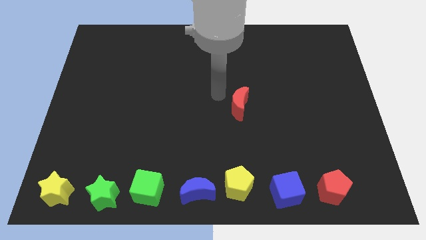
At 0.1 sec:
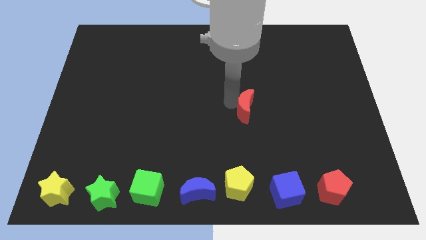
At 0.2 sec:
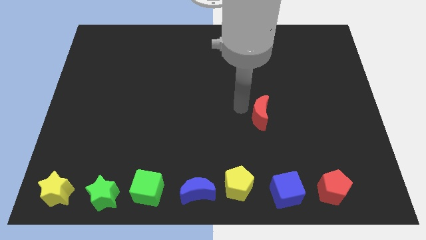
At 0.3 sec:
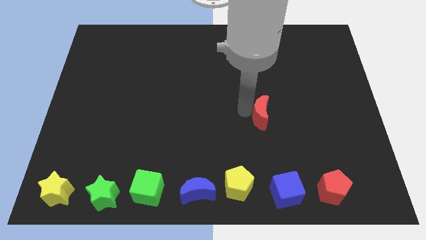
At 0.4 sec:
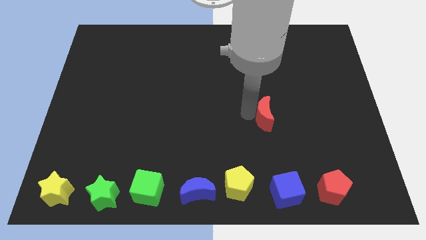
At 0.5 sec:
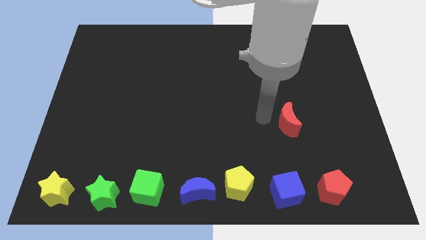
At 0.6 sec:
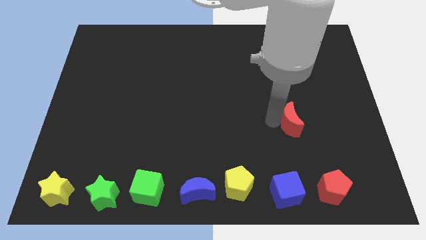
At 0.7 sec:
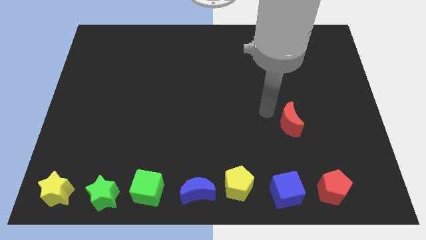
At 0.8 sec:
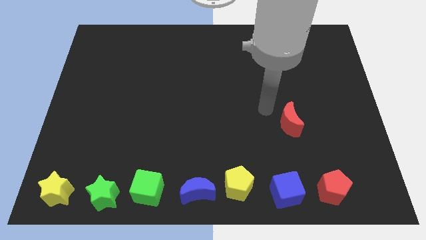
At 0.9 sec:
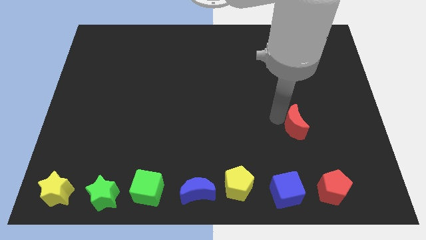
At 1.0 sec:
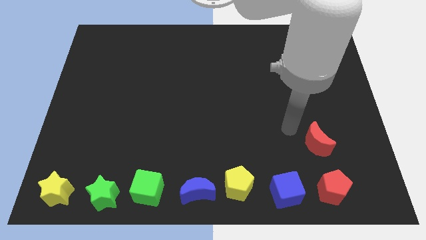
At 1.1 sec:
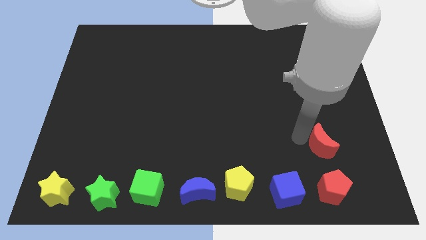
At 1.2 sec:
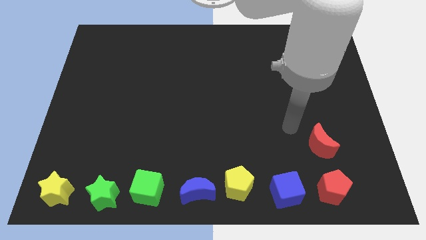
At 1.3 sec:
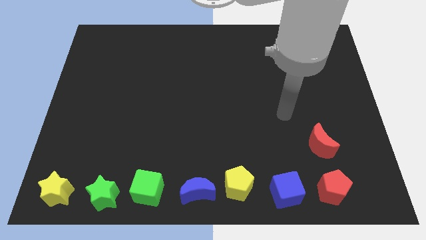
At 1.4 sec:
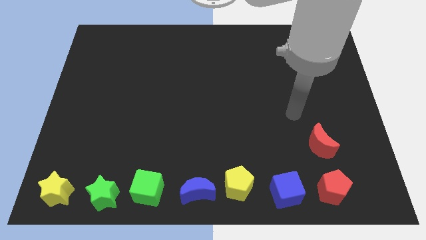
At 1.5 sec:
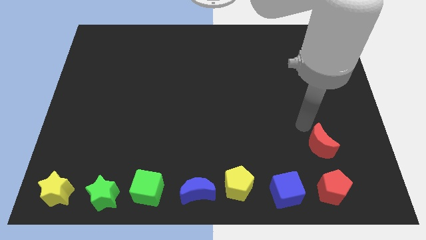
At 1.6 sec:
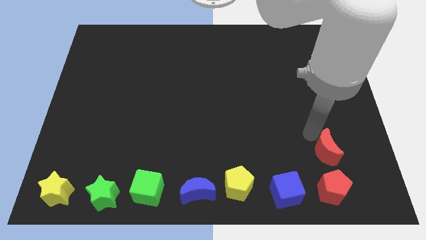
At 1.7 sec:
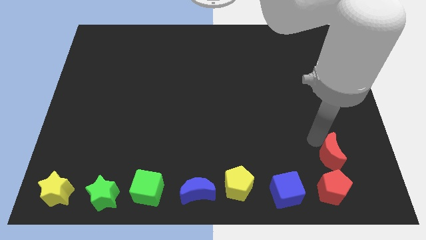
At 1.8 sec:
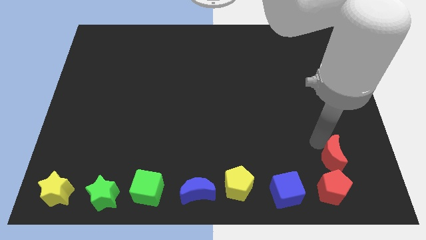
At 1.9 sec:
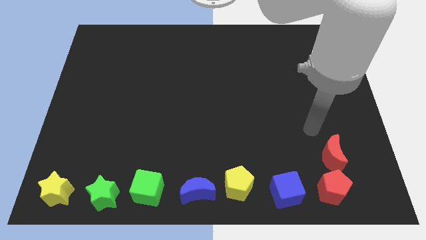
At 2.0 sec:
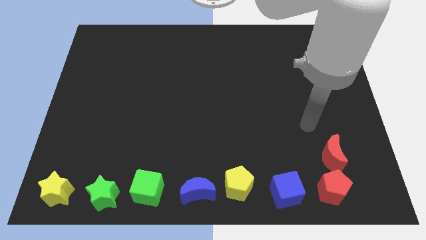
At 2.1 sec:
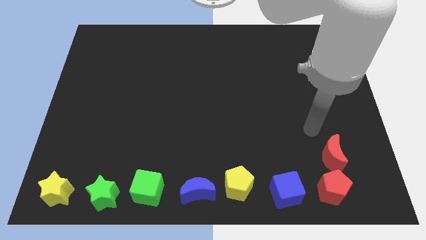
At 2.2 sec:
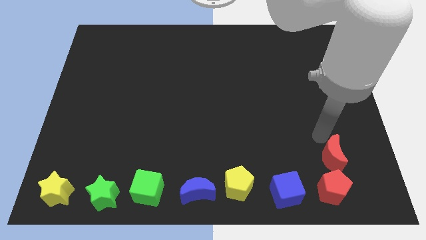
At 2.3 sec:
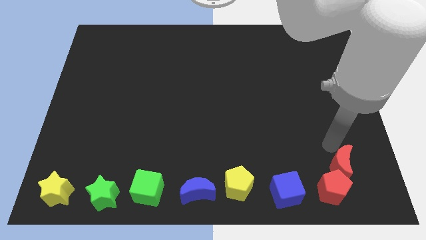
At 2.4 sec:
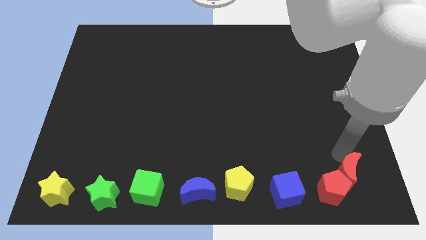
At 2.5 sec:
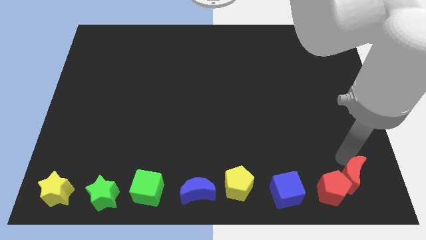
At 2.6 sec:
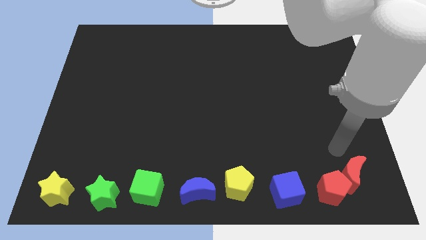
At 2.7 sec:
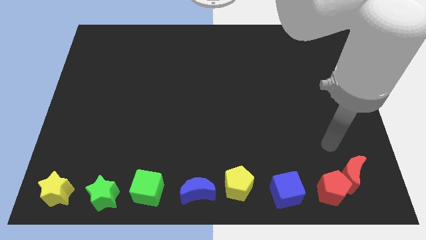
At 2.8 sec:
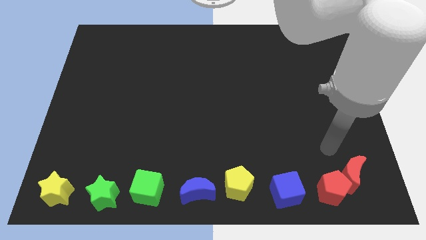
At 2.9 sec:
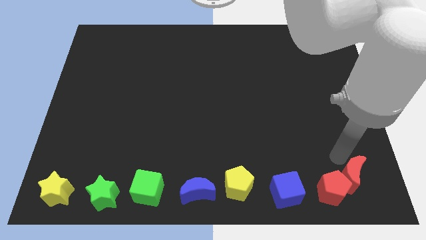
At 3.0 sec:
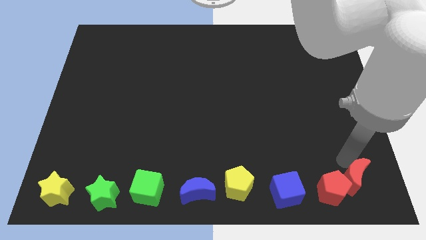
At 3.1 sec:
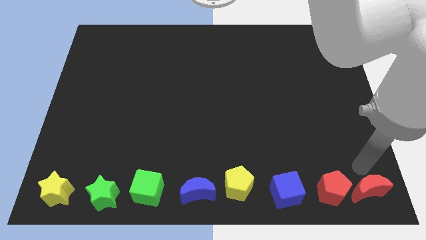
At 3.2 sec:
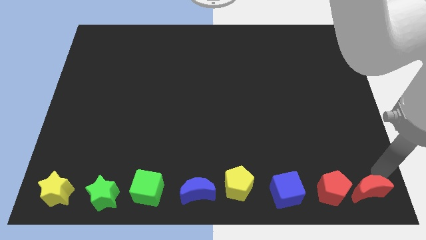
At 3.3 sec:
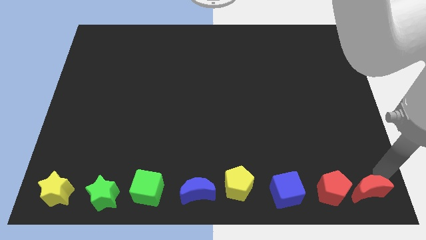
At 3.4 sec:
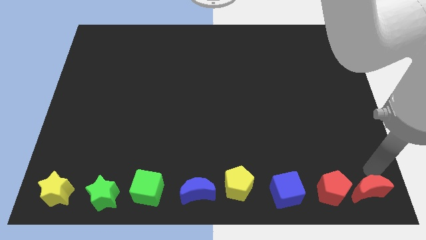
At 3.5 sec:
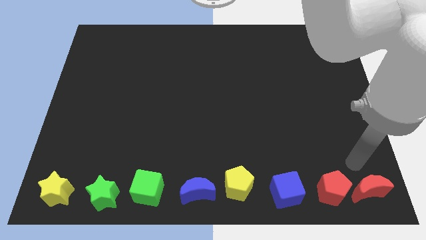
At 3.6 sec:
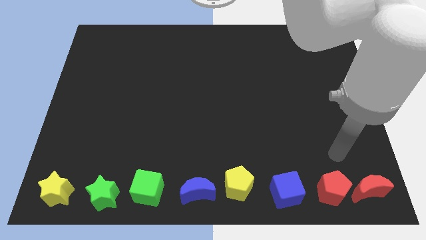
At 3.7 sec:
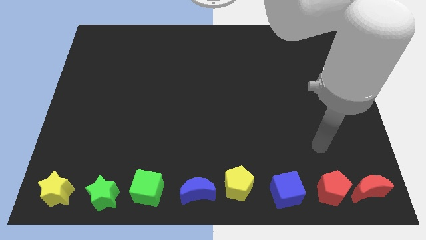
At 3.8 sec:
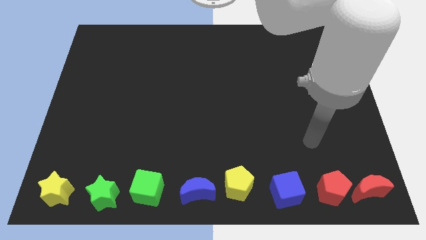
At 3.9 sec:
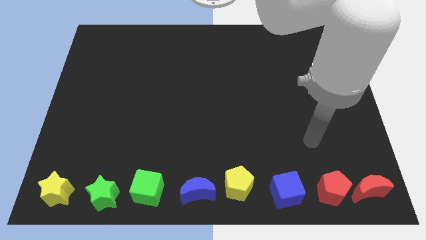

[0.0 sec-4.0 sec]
push red moon parallel right to red pentagon

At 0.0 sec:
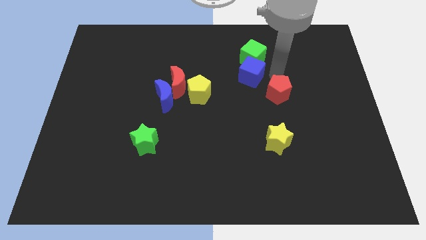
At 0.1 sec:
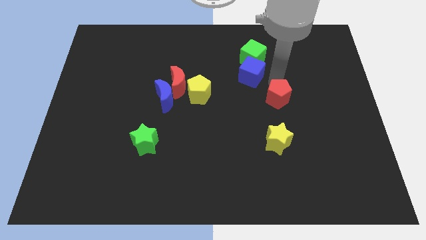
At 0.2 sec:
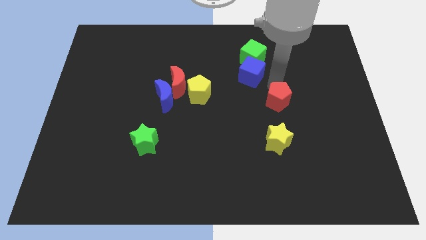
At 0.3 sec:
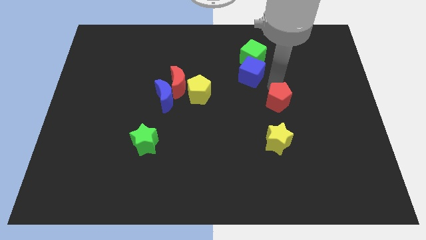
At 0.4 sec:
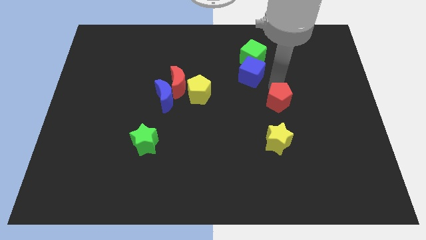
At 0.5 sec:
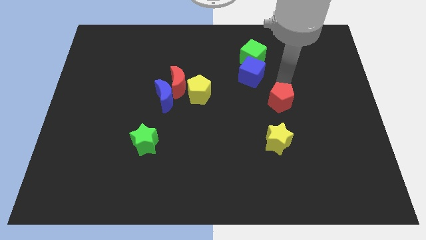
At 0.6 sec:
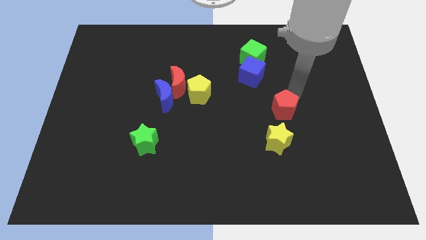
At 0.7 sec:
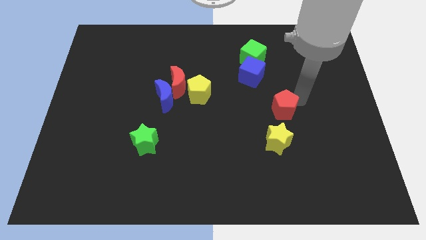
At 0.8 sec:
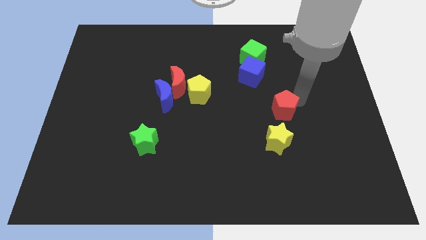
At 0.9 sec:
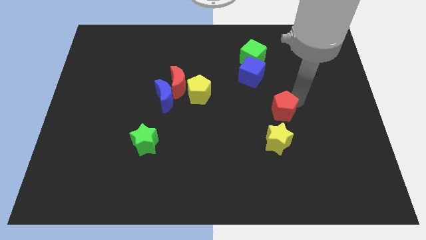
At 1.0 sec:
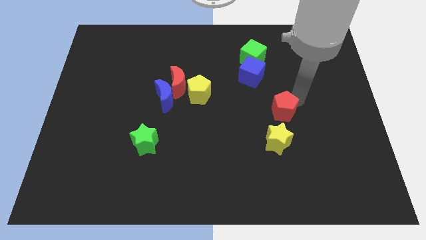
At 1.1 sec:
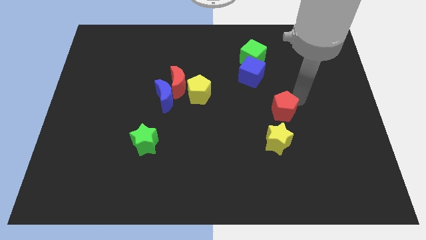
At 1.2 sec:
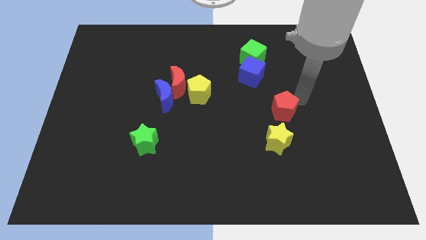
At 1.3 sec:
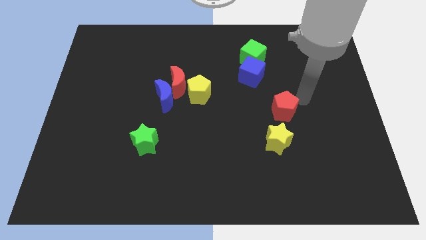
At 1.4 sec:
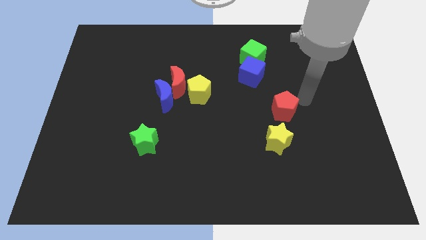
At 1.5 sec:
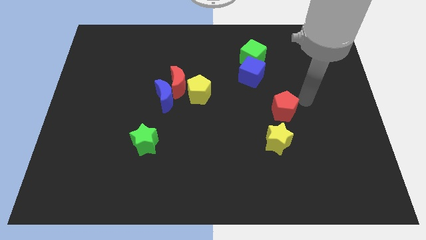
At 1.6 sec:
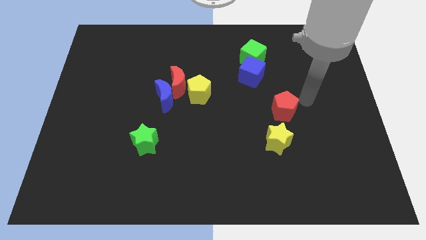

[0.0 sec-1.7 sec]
push the red pentagon close to the yellow star

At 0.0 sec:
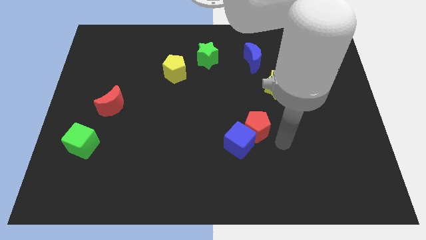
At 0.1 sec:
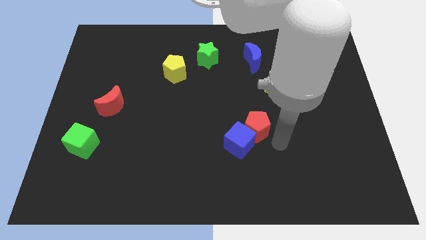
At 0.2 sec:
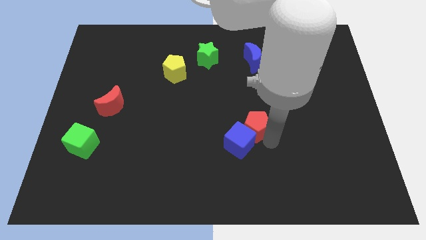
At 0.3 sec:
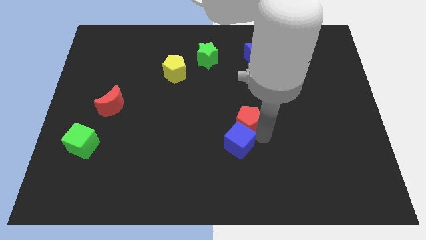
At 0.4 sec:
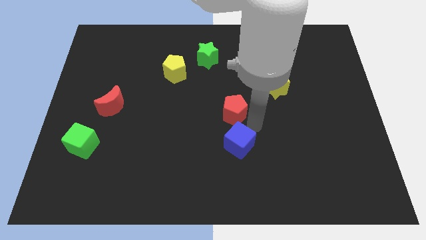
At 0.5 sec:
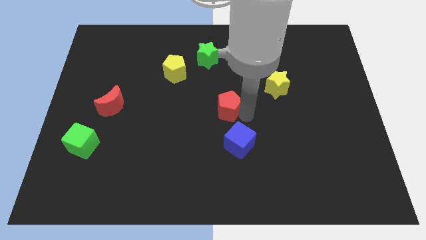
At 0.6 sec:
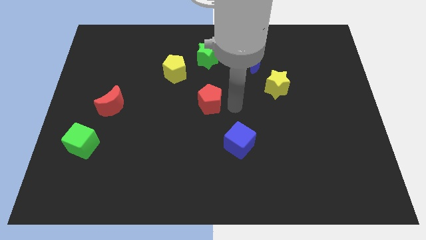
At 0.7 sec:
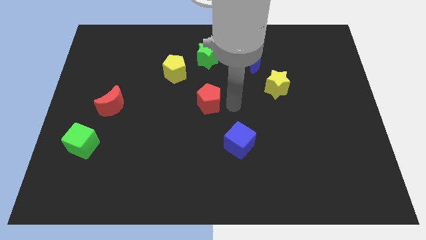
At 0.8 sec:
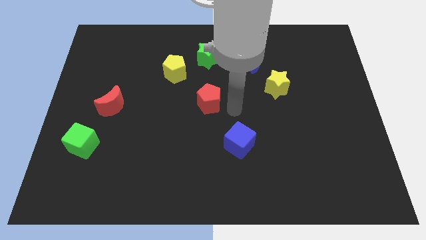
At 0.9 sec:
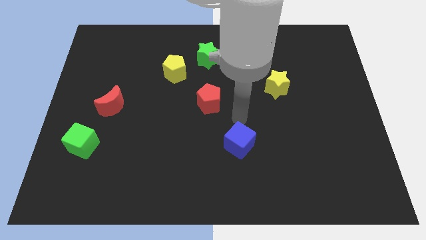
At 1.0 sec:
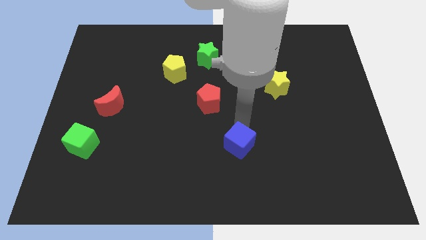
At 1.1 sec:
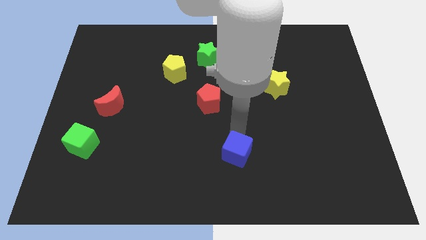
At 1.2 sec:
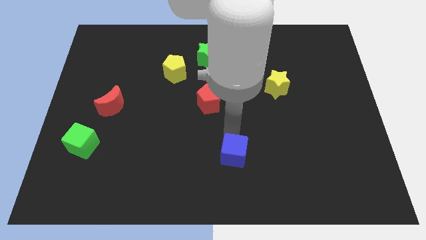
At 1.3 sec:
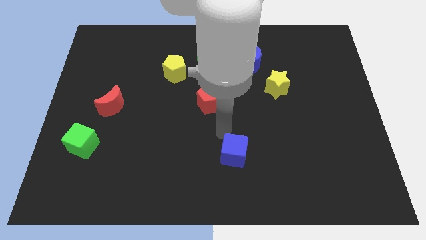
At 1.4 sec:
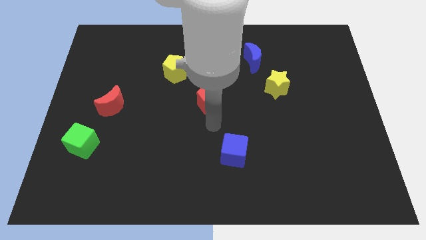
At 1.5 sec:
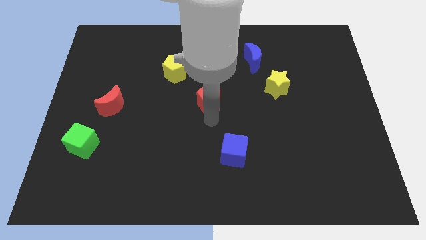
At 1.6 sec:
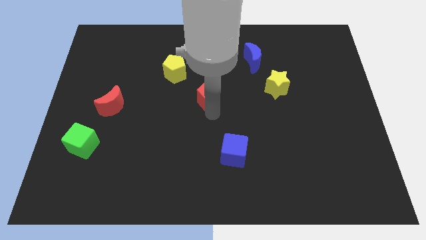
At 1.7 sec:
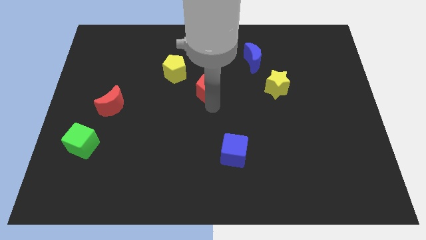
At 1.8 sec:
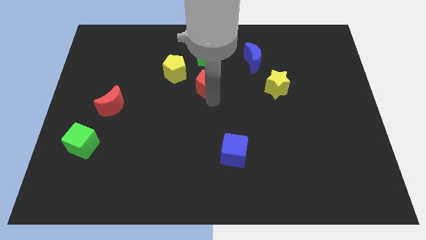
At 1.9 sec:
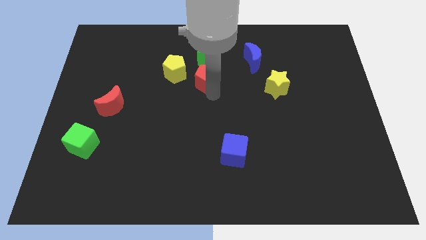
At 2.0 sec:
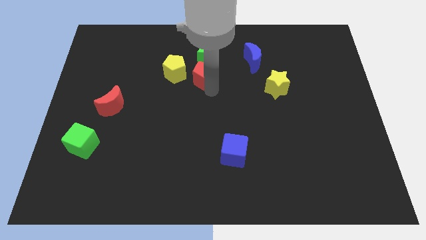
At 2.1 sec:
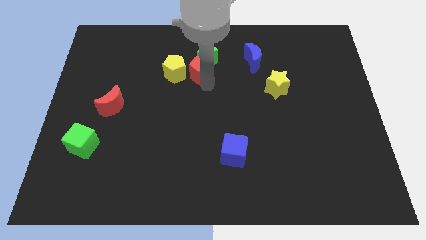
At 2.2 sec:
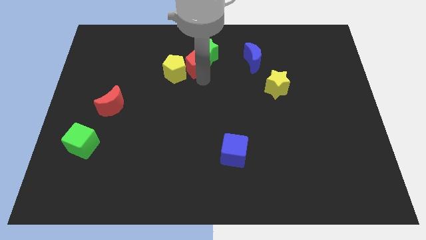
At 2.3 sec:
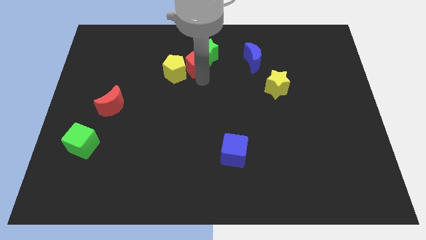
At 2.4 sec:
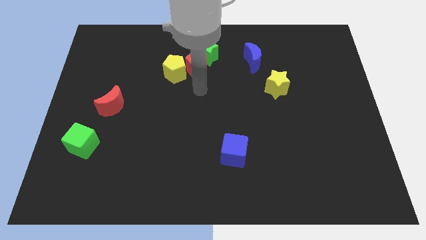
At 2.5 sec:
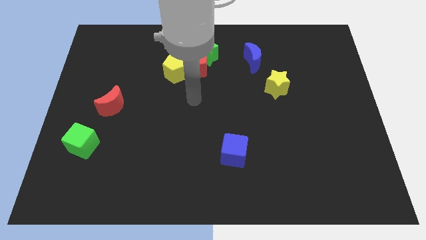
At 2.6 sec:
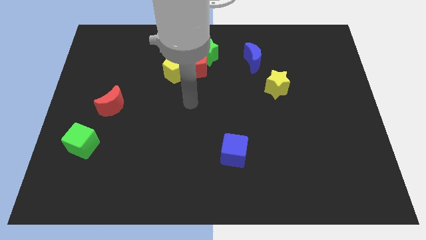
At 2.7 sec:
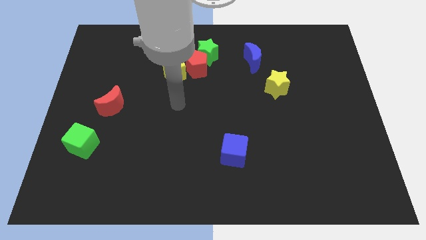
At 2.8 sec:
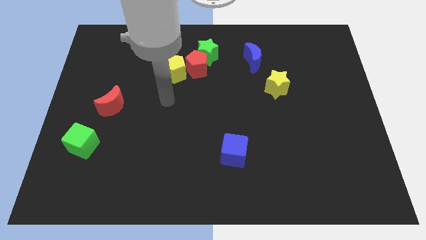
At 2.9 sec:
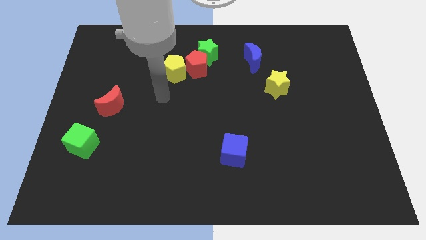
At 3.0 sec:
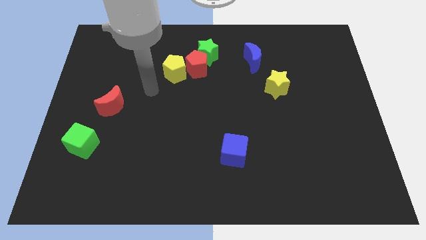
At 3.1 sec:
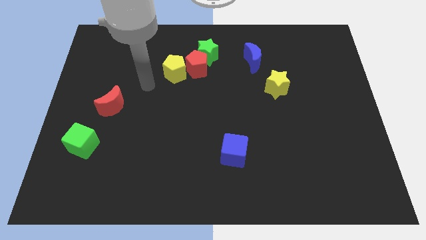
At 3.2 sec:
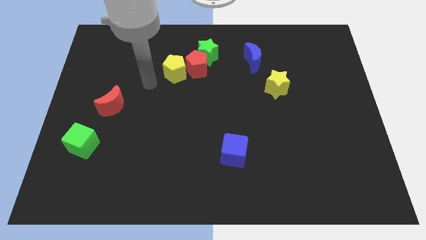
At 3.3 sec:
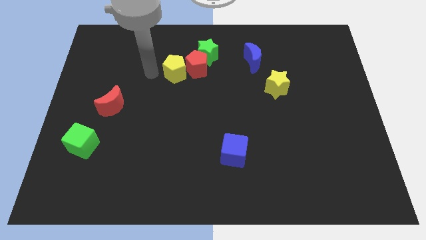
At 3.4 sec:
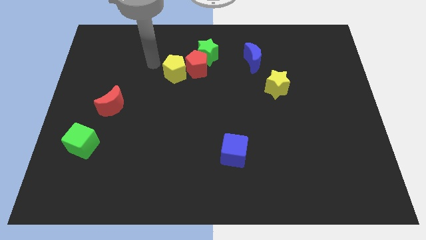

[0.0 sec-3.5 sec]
separate the red pentagon from blue cube
